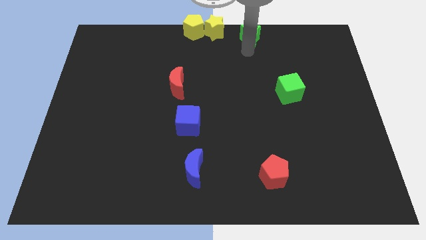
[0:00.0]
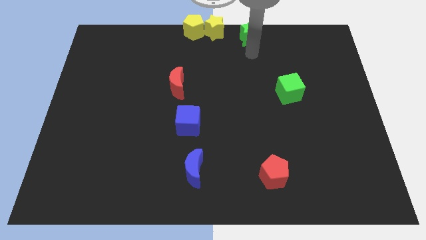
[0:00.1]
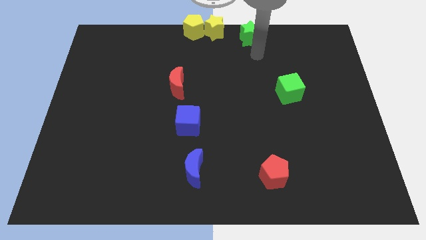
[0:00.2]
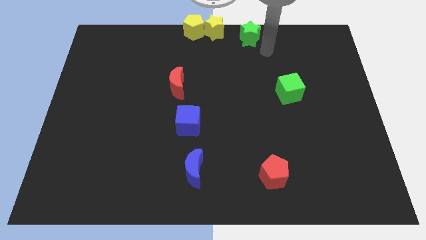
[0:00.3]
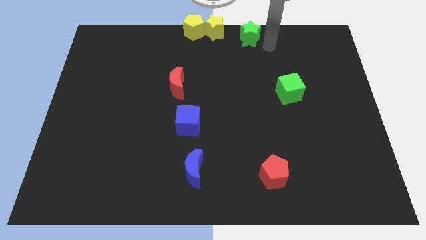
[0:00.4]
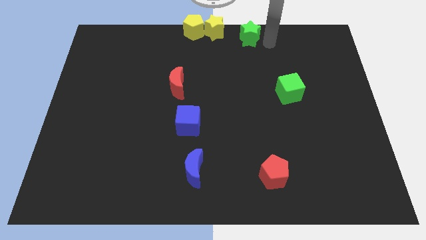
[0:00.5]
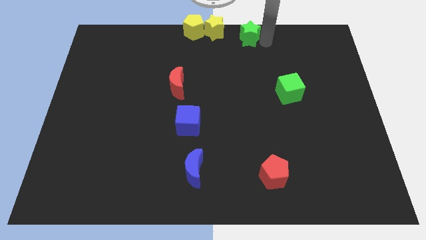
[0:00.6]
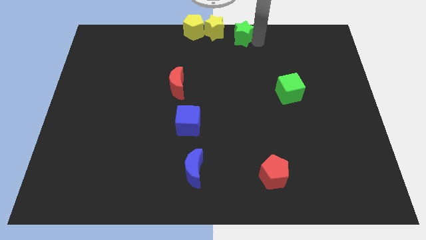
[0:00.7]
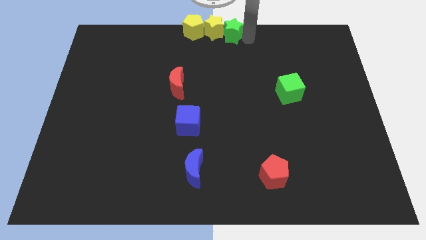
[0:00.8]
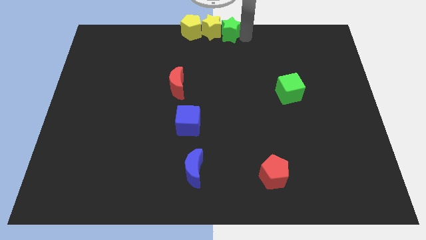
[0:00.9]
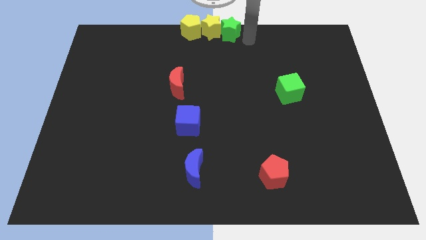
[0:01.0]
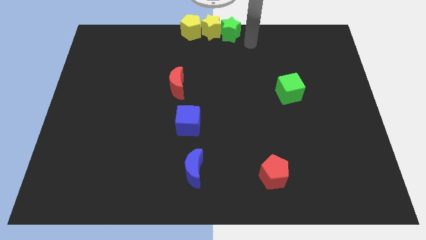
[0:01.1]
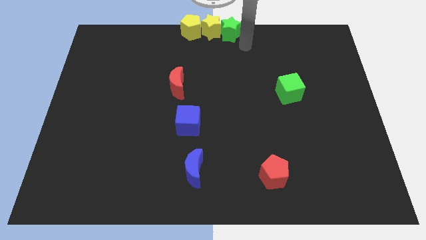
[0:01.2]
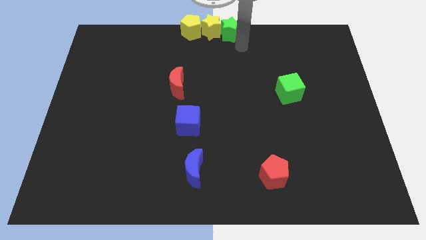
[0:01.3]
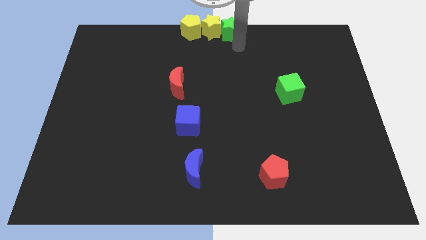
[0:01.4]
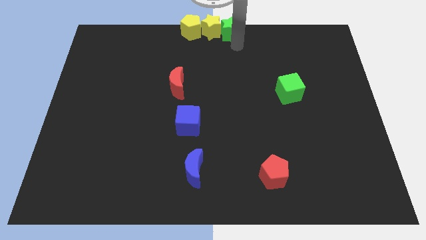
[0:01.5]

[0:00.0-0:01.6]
move the green star into the yellow star

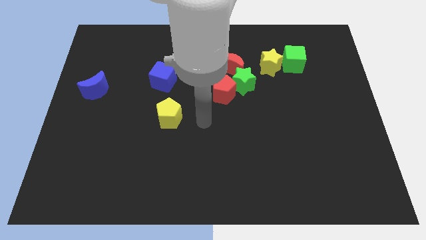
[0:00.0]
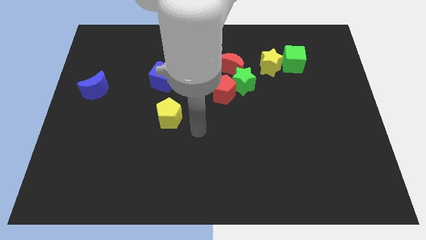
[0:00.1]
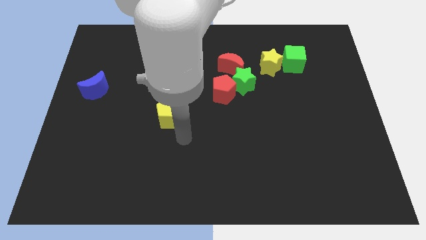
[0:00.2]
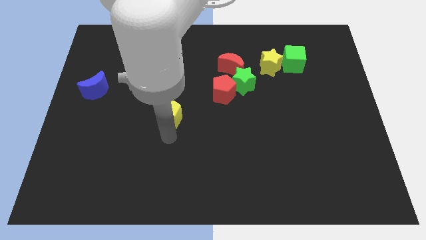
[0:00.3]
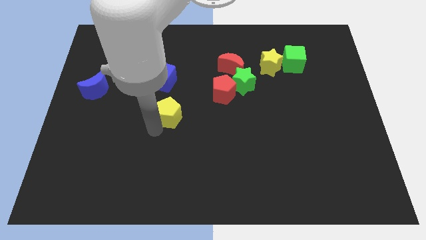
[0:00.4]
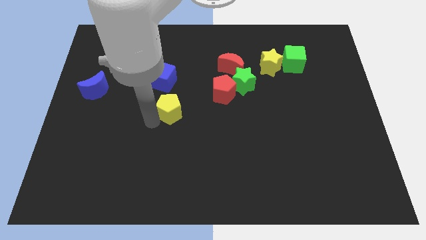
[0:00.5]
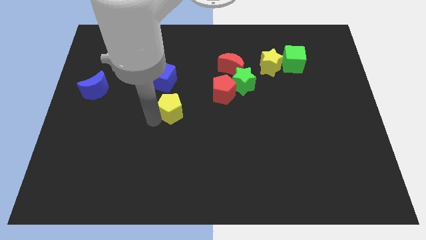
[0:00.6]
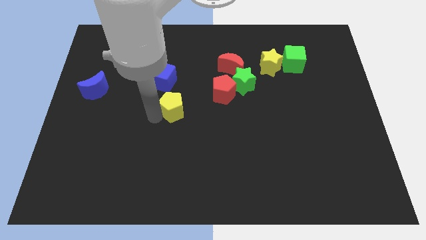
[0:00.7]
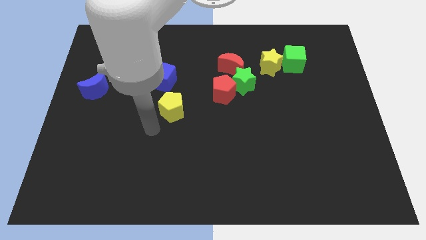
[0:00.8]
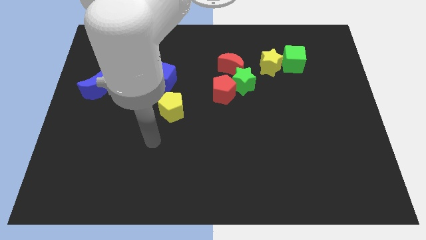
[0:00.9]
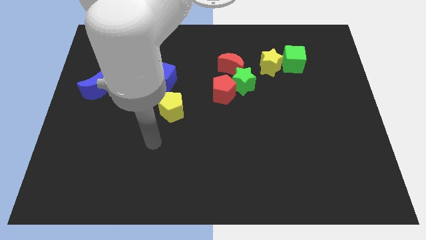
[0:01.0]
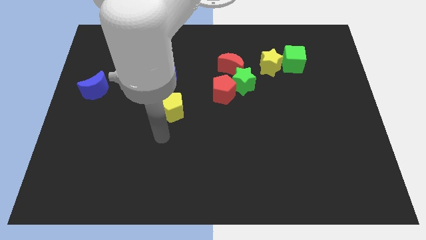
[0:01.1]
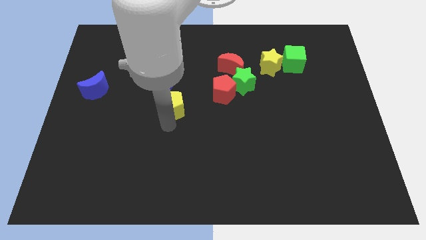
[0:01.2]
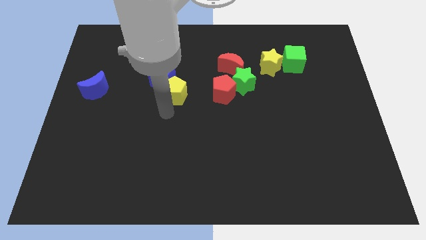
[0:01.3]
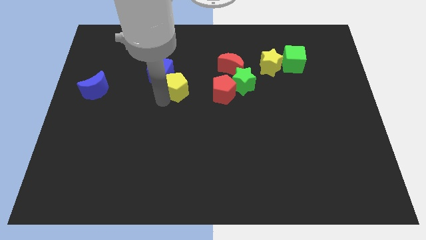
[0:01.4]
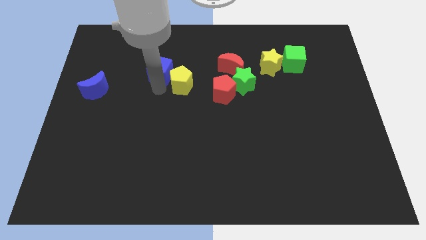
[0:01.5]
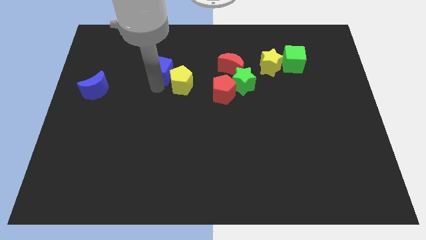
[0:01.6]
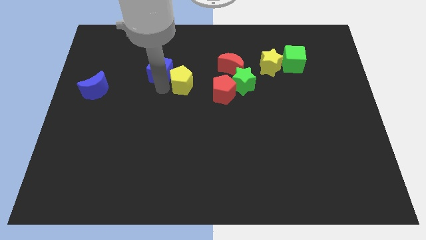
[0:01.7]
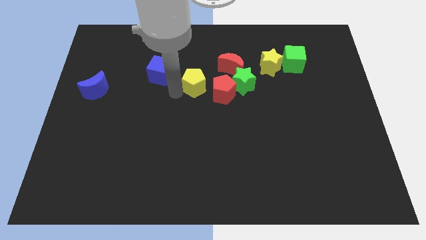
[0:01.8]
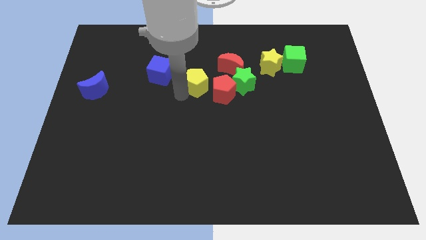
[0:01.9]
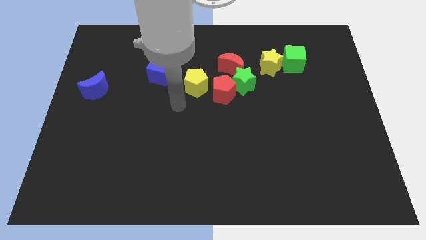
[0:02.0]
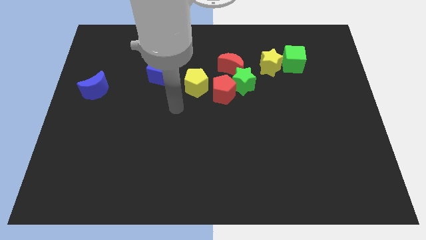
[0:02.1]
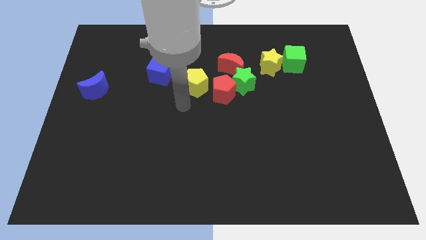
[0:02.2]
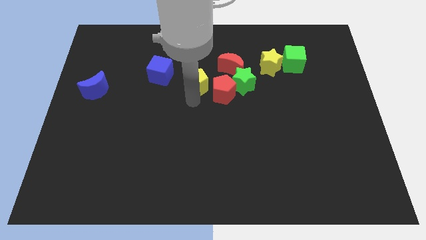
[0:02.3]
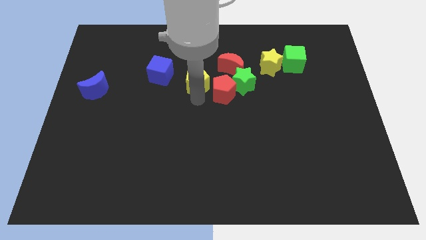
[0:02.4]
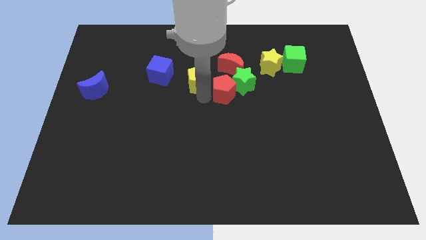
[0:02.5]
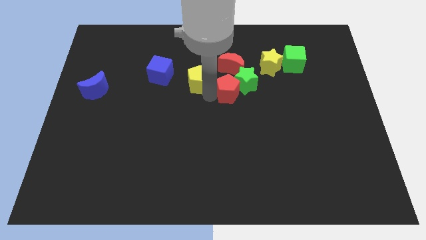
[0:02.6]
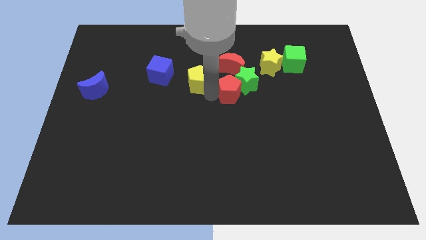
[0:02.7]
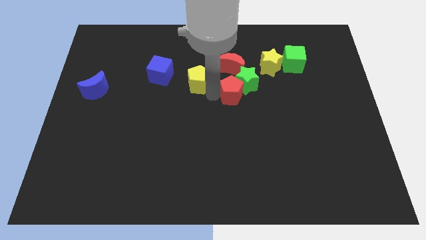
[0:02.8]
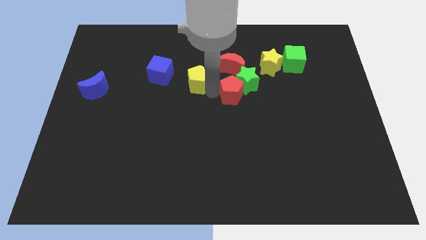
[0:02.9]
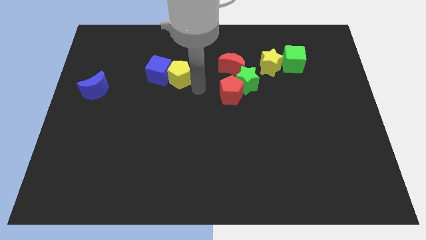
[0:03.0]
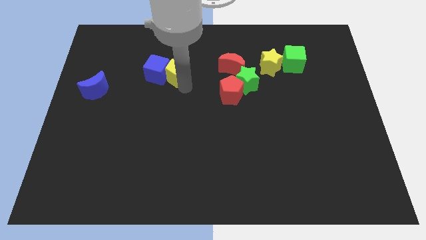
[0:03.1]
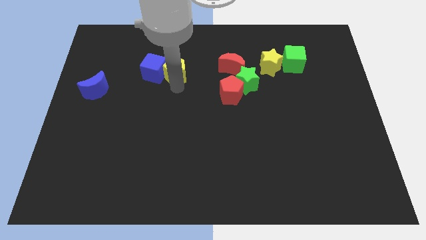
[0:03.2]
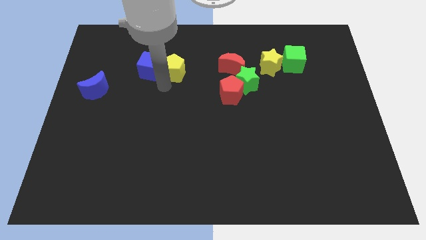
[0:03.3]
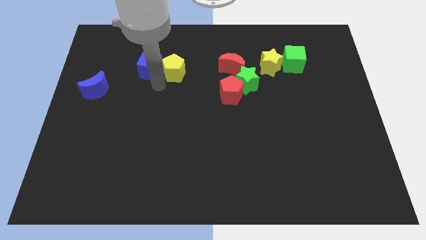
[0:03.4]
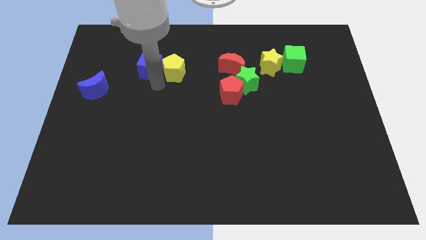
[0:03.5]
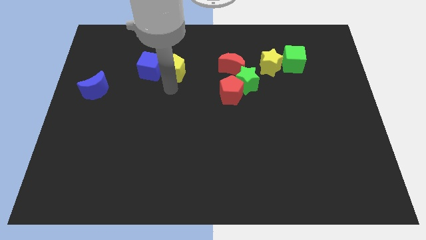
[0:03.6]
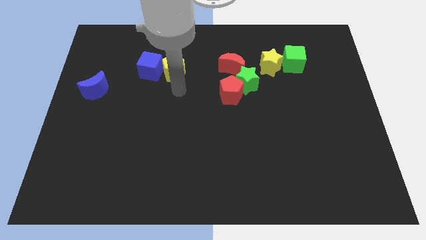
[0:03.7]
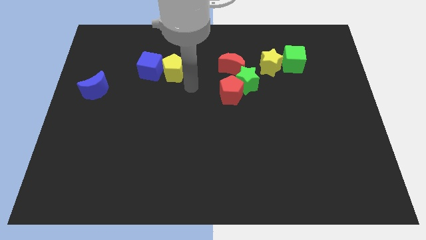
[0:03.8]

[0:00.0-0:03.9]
move the yellow pentagon to the right of the blue cube

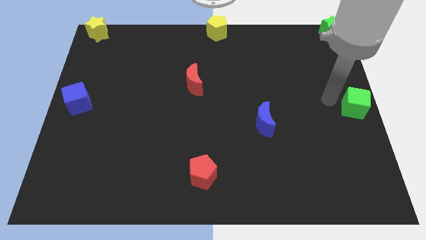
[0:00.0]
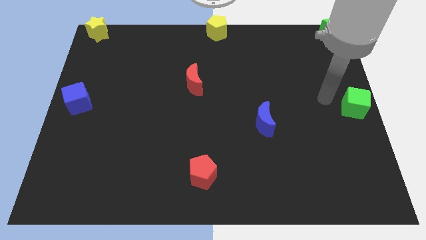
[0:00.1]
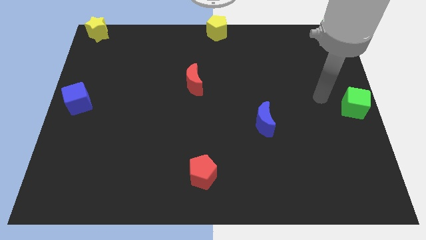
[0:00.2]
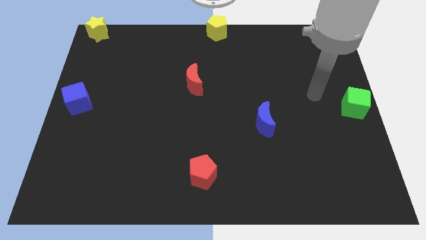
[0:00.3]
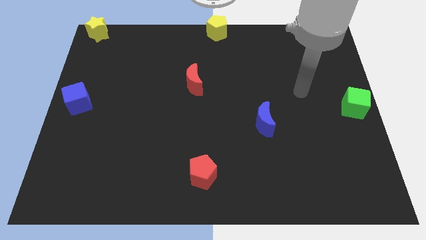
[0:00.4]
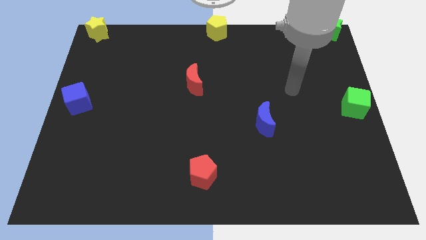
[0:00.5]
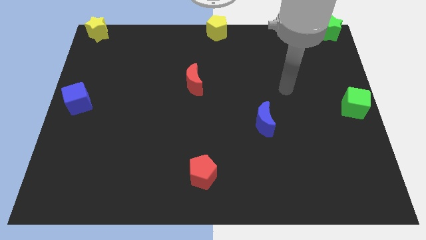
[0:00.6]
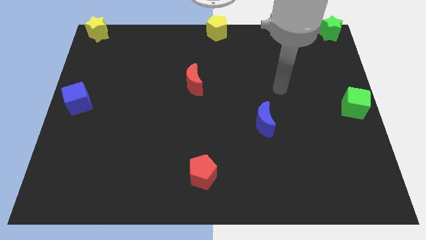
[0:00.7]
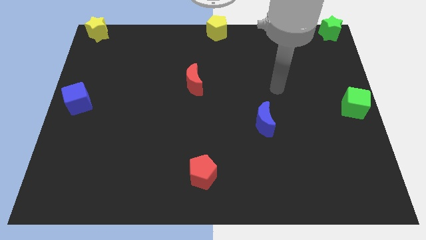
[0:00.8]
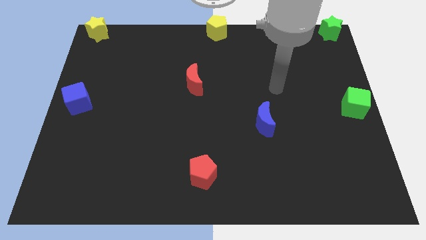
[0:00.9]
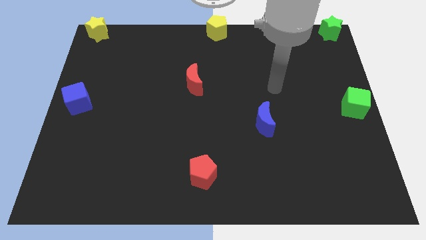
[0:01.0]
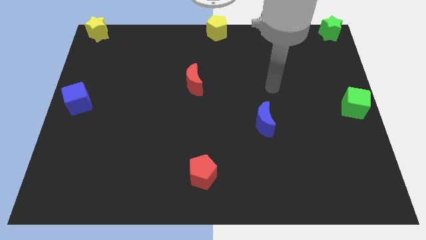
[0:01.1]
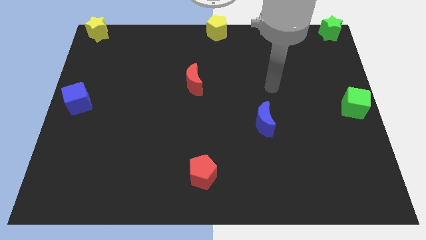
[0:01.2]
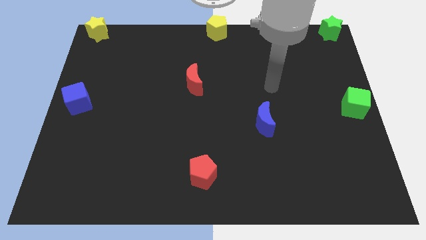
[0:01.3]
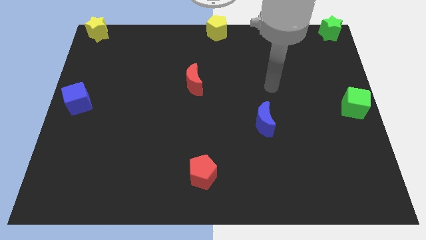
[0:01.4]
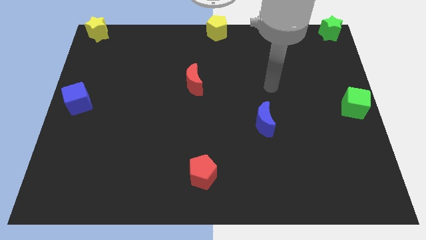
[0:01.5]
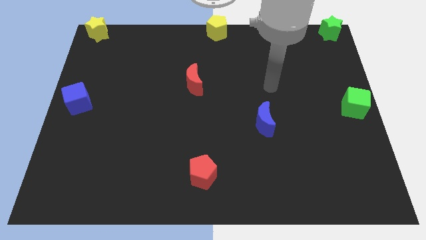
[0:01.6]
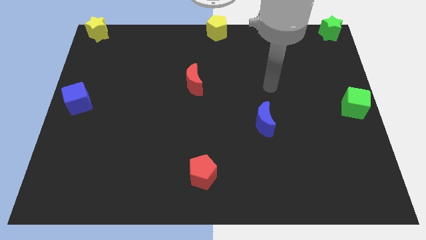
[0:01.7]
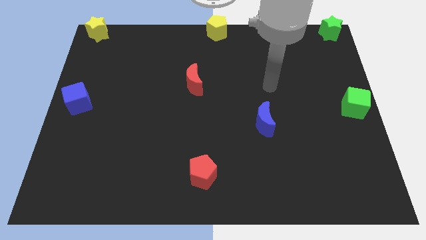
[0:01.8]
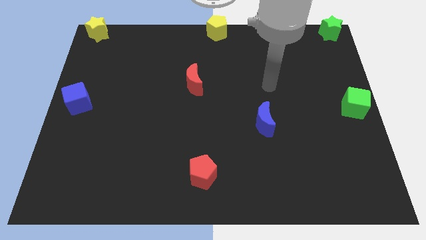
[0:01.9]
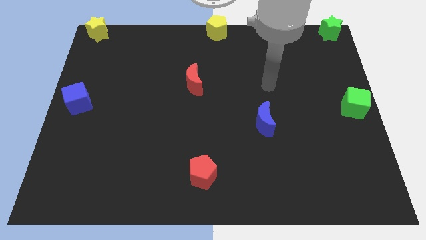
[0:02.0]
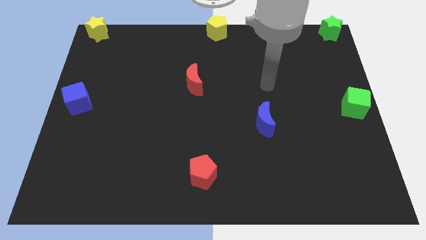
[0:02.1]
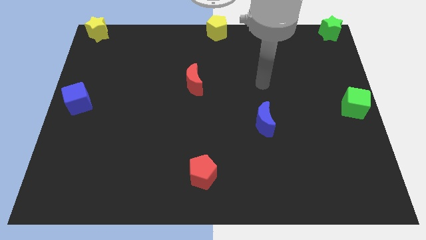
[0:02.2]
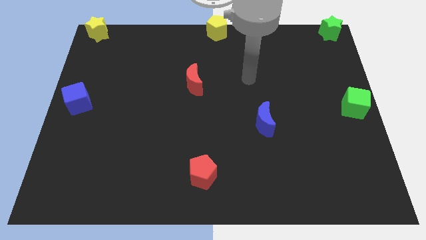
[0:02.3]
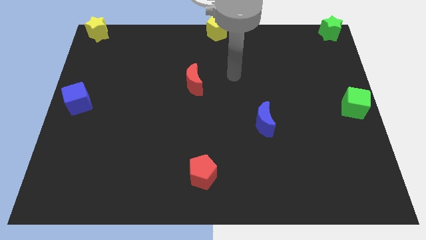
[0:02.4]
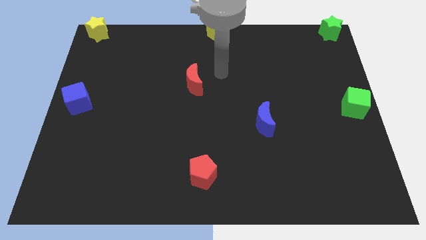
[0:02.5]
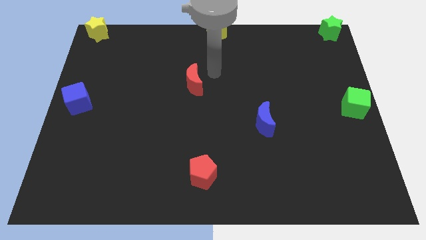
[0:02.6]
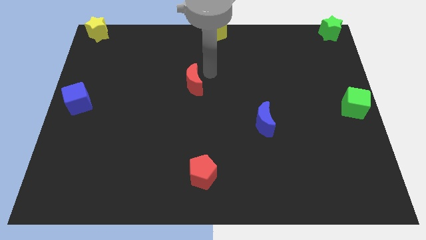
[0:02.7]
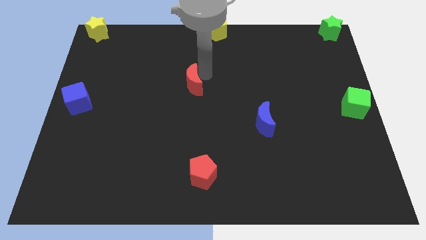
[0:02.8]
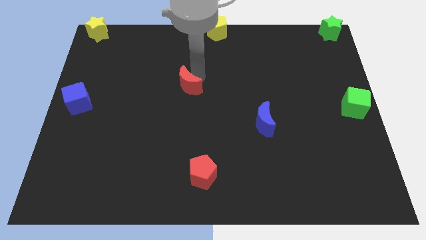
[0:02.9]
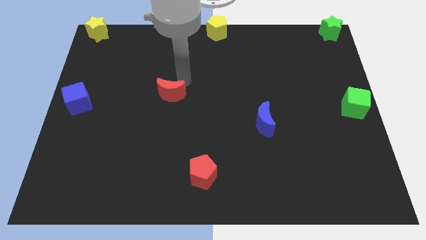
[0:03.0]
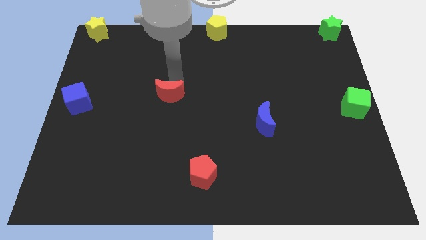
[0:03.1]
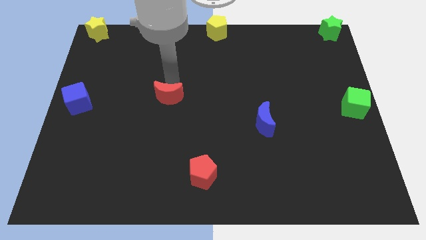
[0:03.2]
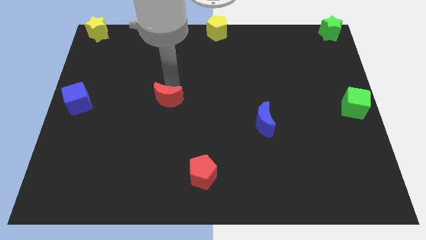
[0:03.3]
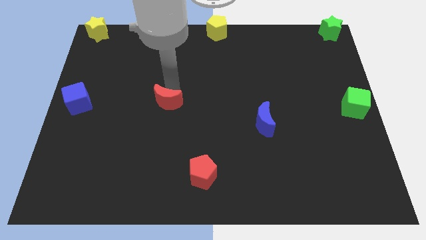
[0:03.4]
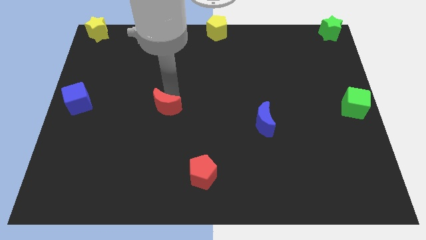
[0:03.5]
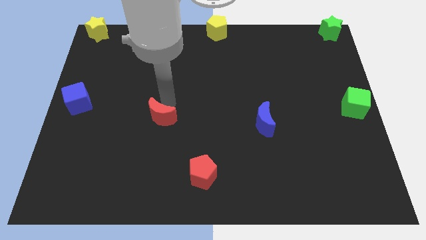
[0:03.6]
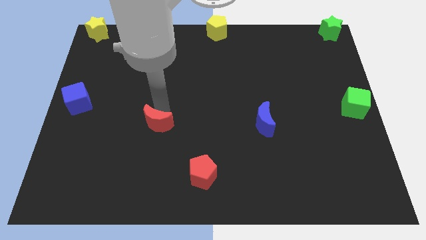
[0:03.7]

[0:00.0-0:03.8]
slide the red moon between the blue cube and blue moon
